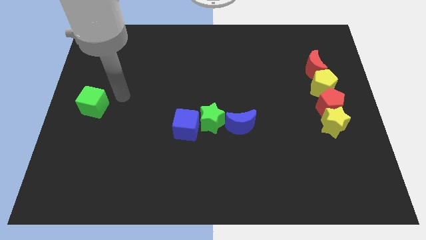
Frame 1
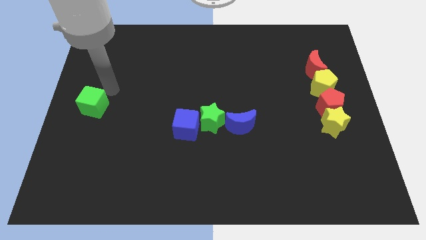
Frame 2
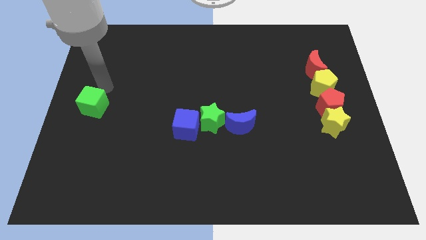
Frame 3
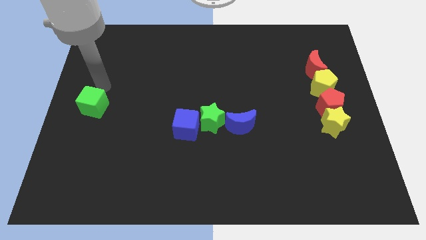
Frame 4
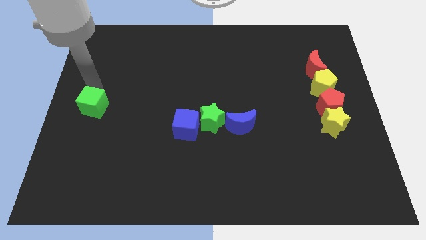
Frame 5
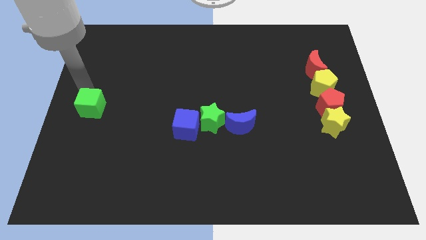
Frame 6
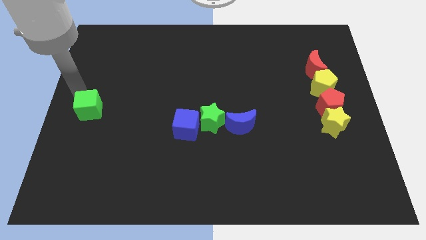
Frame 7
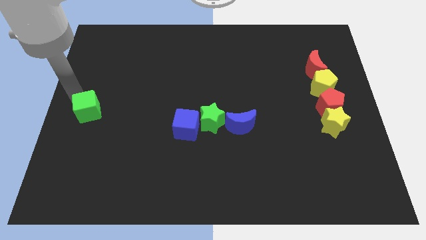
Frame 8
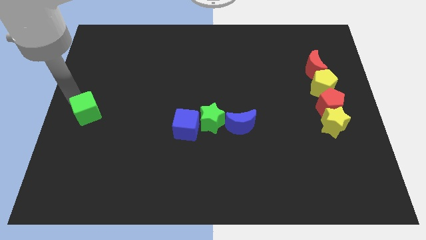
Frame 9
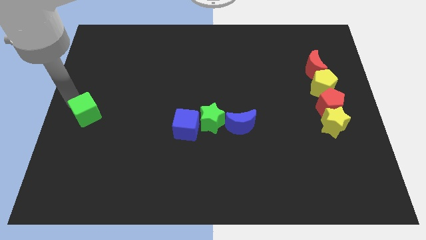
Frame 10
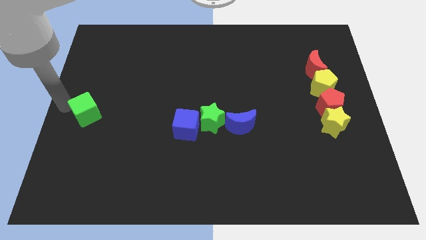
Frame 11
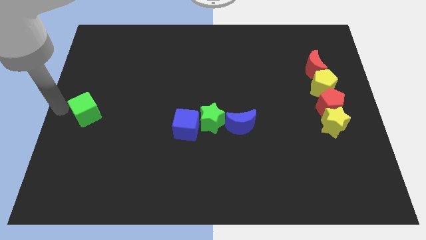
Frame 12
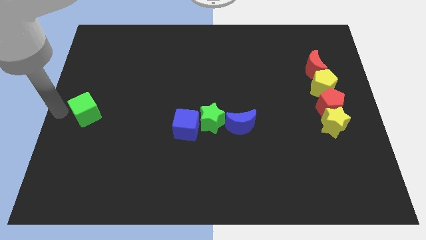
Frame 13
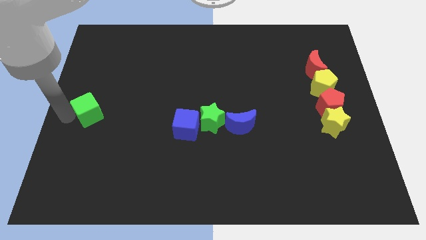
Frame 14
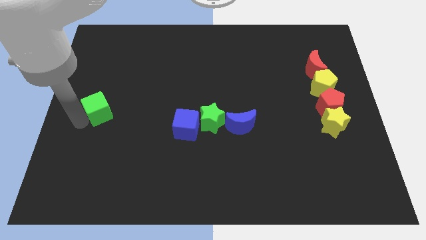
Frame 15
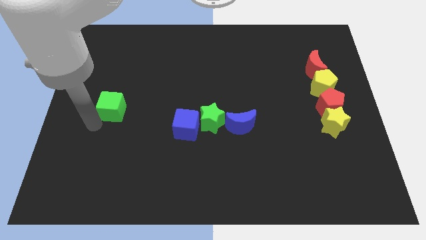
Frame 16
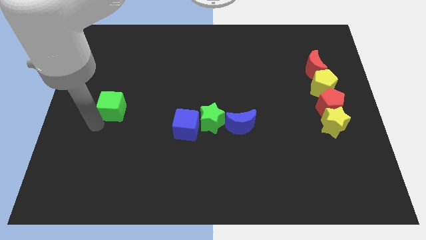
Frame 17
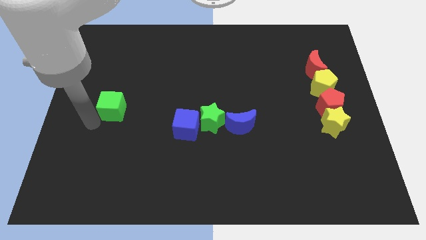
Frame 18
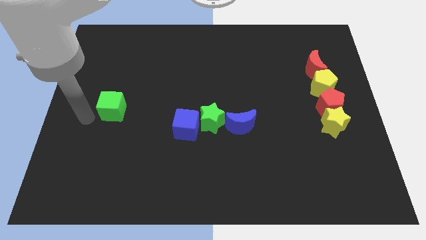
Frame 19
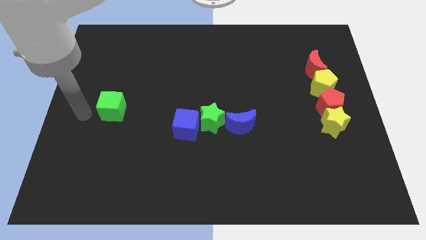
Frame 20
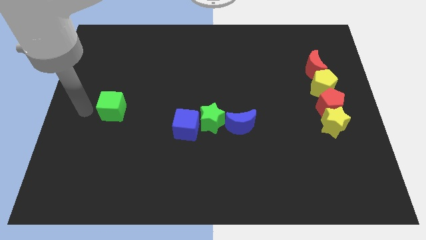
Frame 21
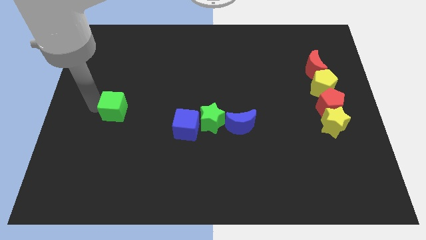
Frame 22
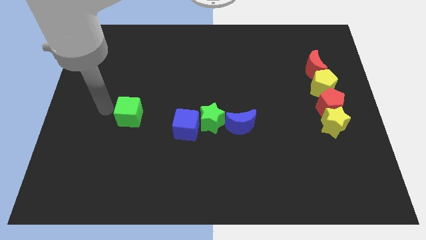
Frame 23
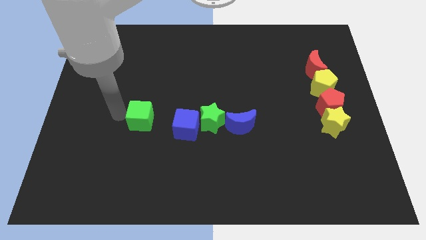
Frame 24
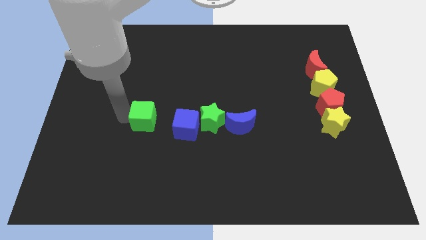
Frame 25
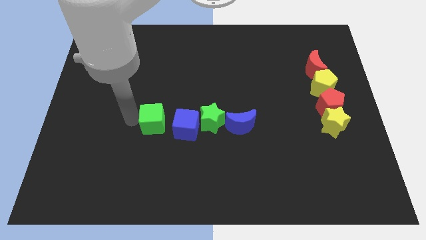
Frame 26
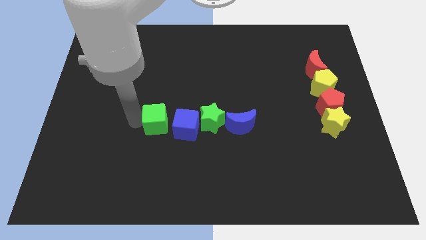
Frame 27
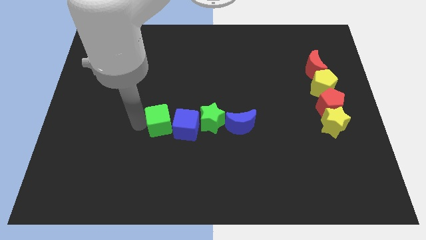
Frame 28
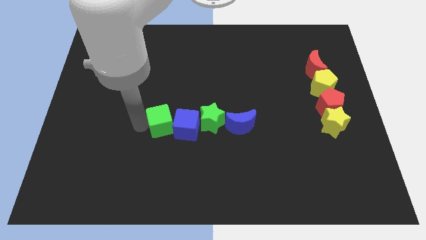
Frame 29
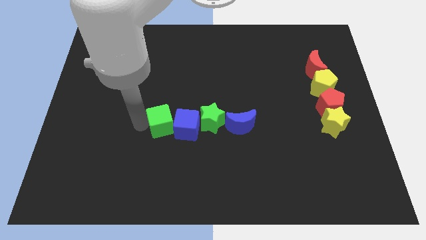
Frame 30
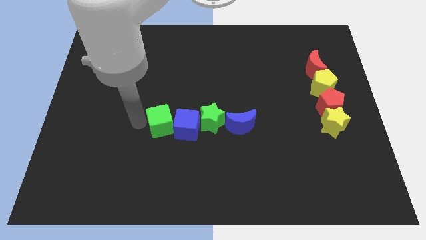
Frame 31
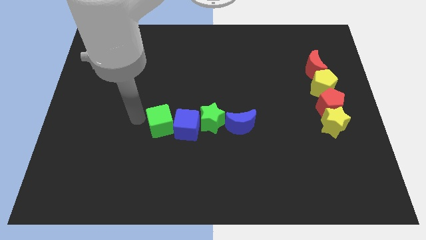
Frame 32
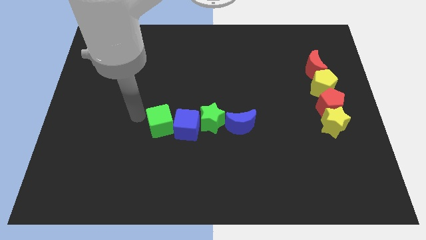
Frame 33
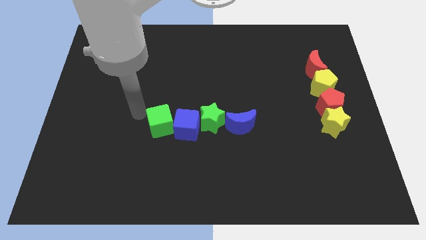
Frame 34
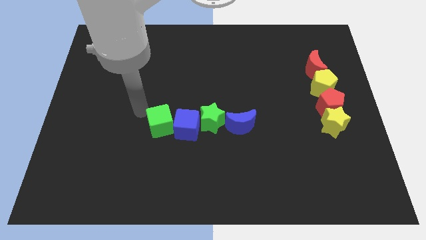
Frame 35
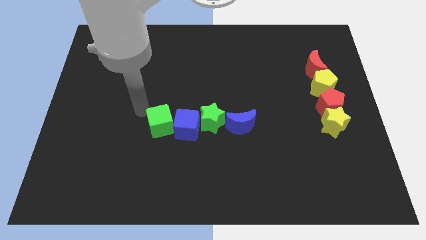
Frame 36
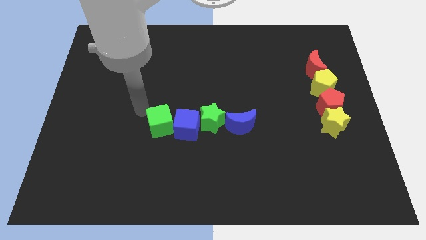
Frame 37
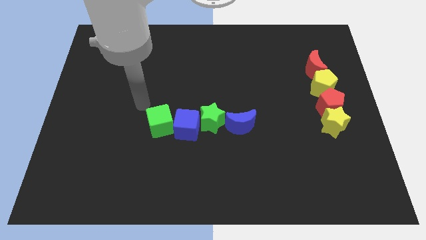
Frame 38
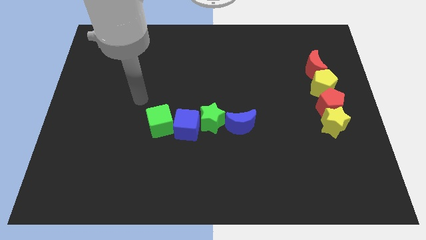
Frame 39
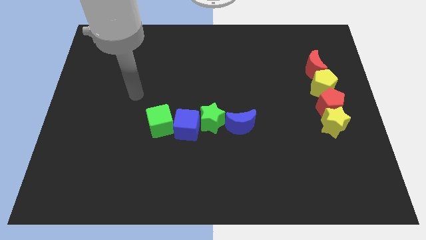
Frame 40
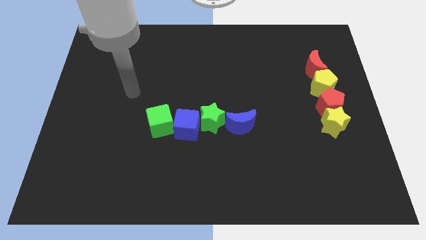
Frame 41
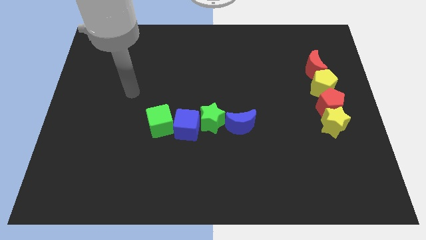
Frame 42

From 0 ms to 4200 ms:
push the green cube to the left side of the blue cube

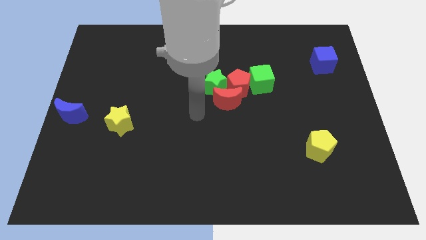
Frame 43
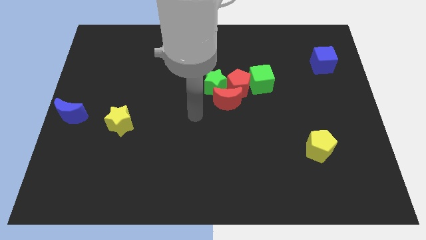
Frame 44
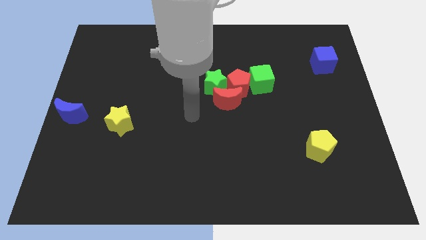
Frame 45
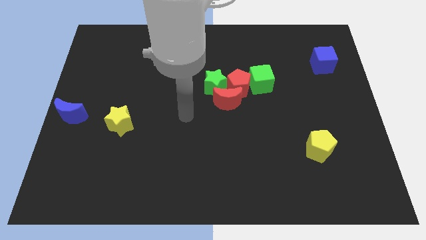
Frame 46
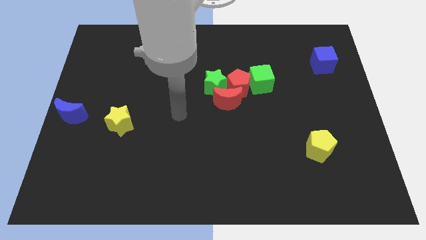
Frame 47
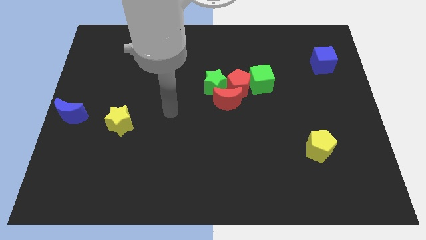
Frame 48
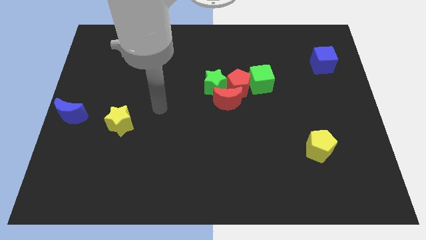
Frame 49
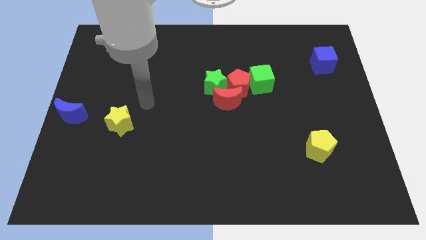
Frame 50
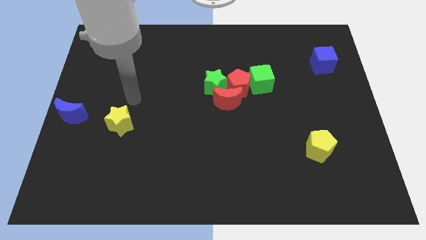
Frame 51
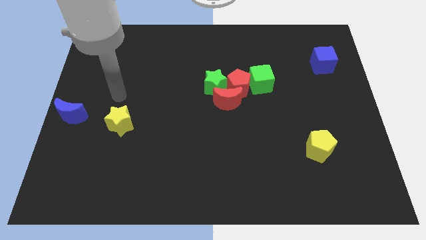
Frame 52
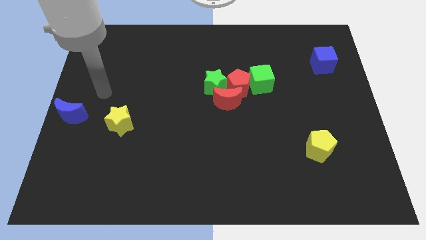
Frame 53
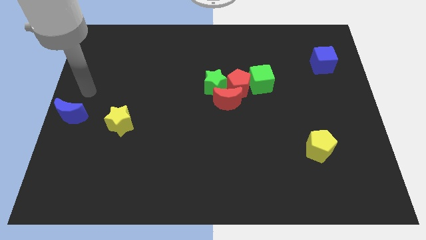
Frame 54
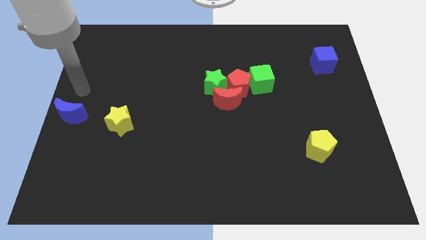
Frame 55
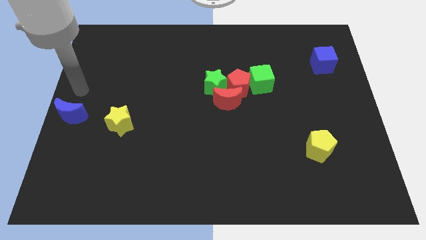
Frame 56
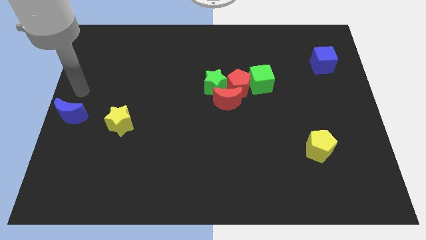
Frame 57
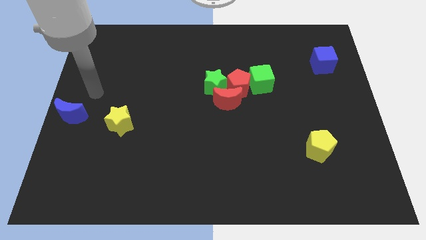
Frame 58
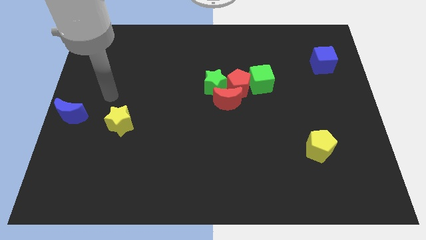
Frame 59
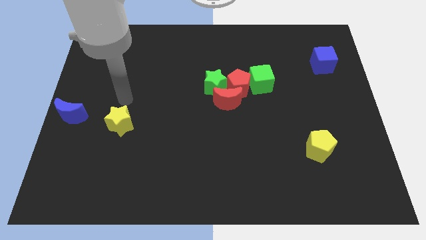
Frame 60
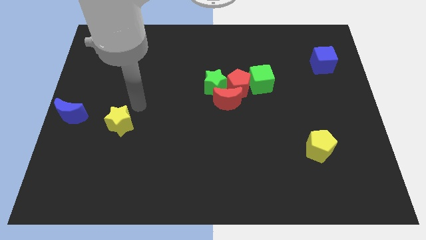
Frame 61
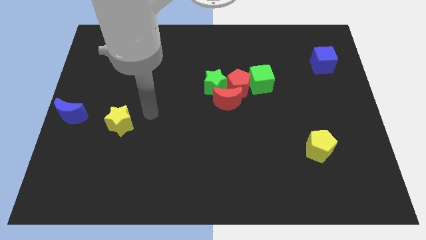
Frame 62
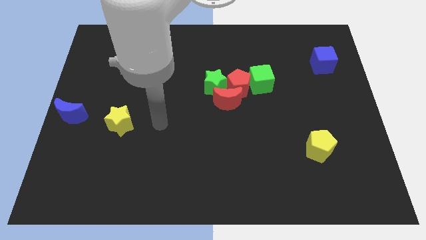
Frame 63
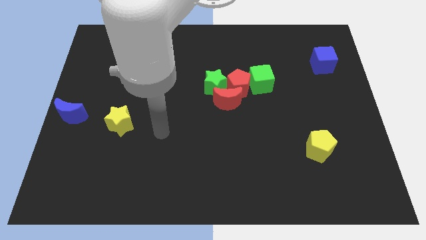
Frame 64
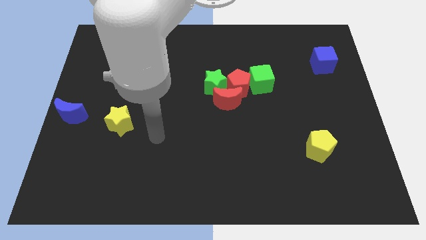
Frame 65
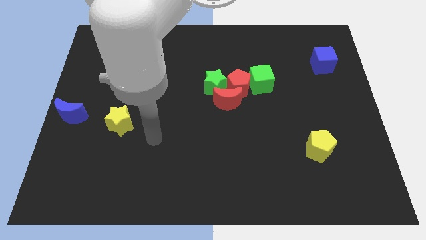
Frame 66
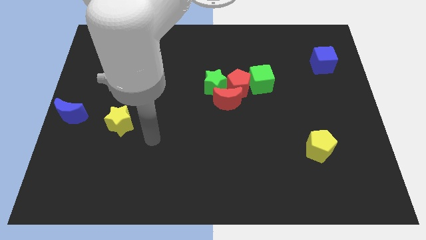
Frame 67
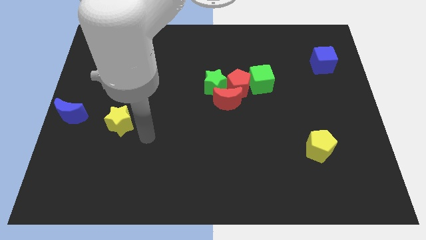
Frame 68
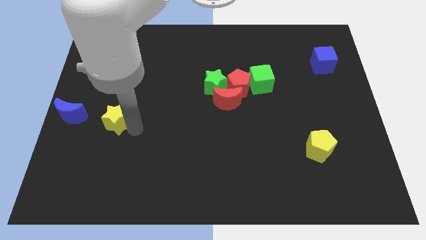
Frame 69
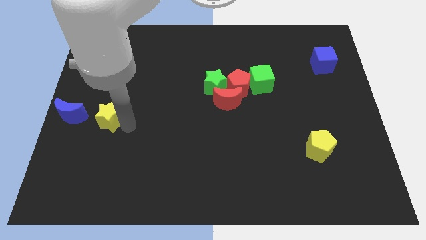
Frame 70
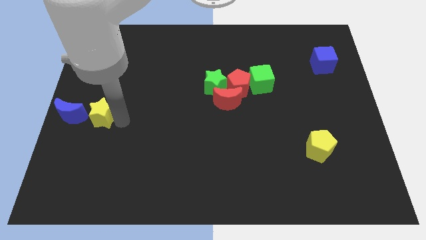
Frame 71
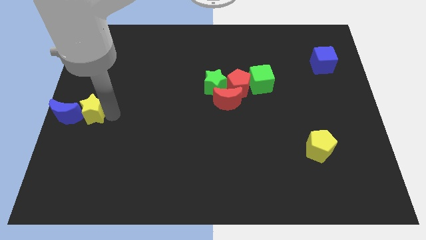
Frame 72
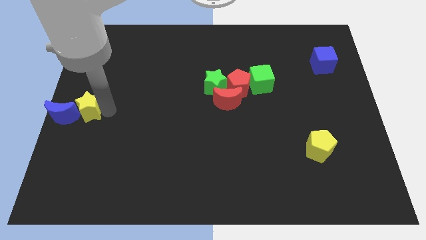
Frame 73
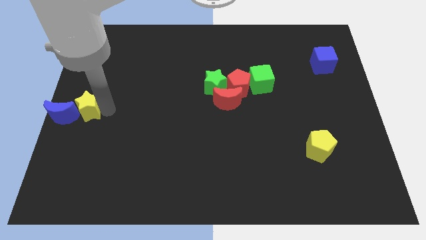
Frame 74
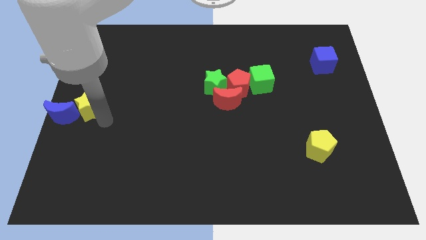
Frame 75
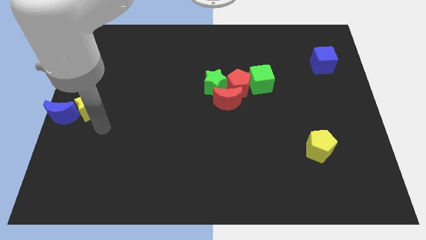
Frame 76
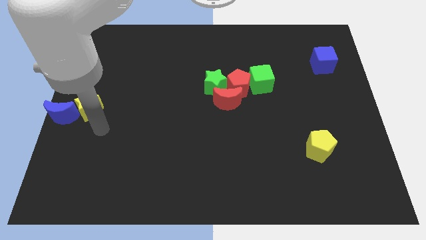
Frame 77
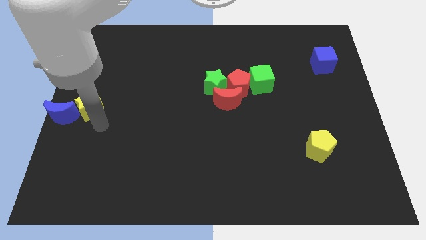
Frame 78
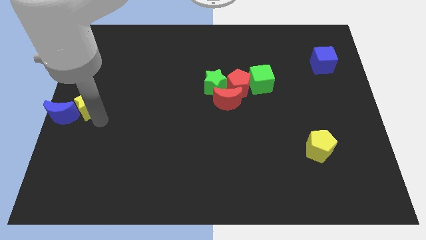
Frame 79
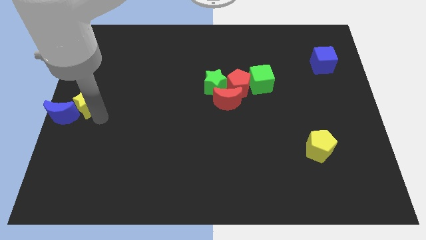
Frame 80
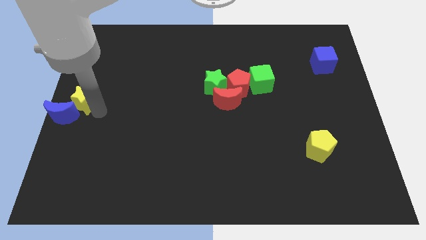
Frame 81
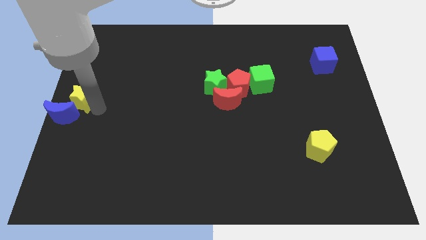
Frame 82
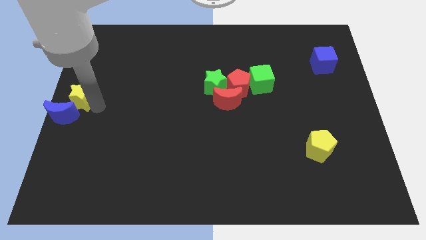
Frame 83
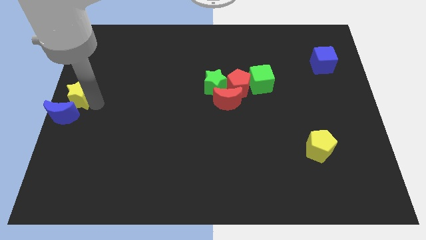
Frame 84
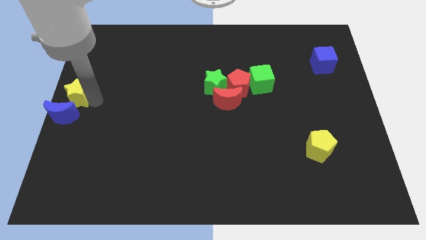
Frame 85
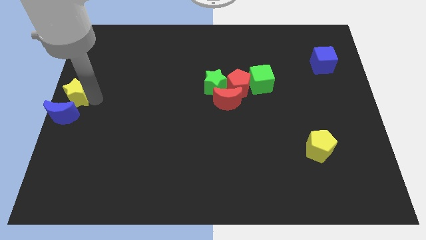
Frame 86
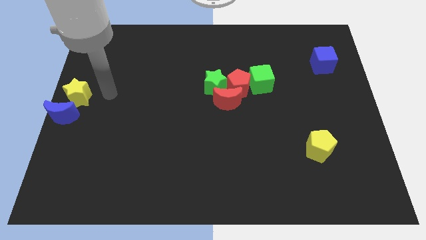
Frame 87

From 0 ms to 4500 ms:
place the yellow star at the center left
